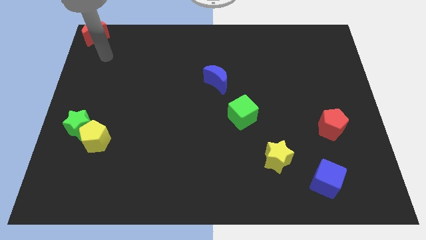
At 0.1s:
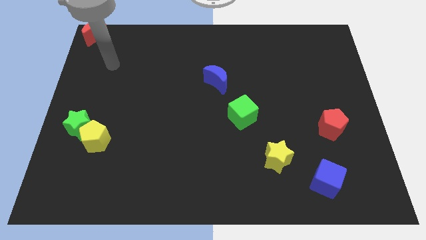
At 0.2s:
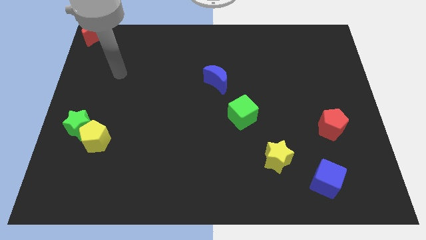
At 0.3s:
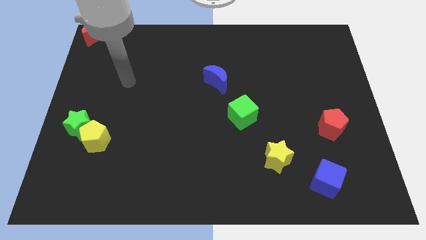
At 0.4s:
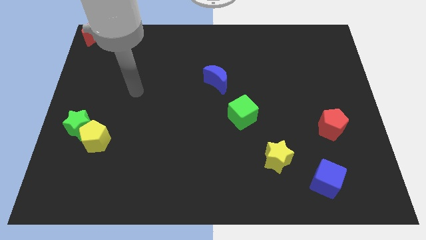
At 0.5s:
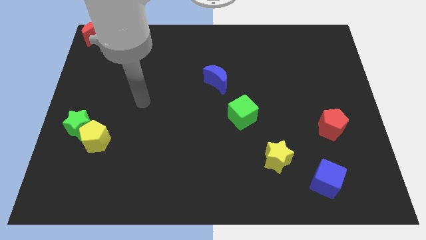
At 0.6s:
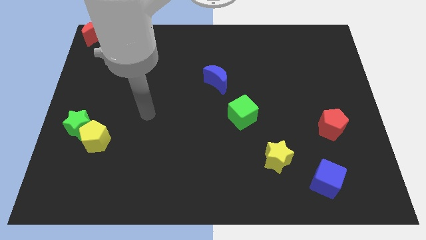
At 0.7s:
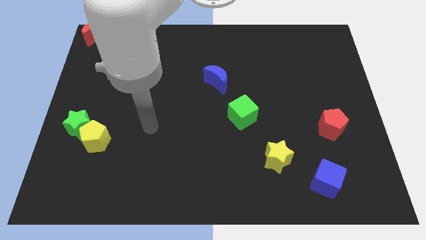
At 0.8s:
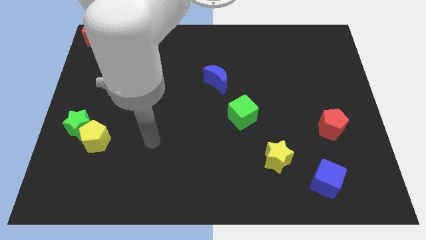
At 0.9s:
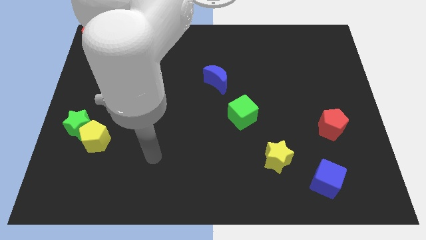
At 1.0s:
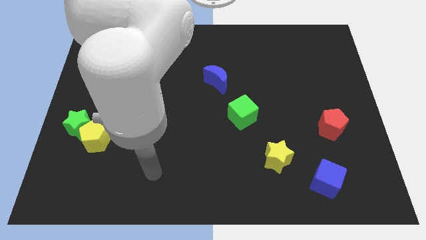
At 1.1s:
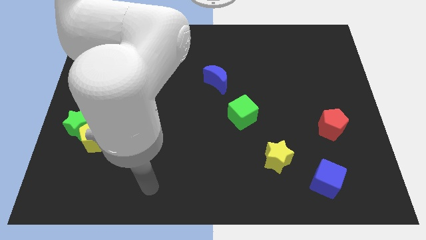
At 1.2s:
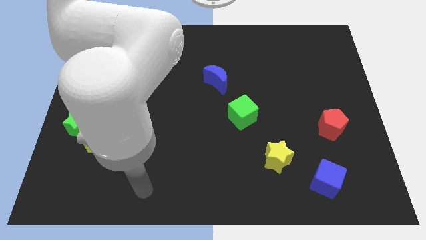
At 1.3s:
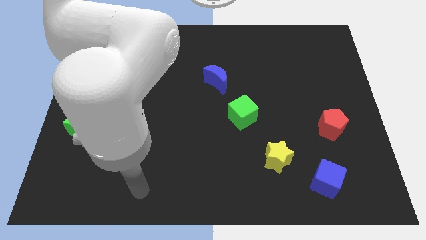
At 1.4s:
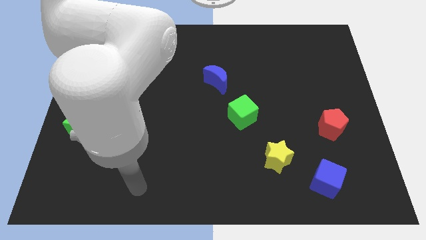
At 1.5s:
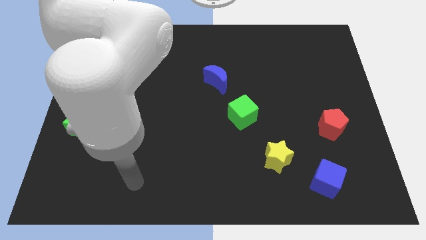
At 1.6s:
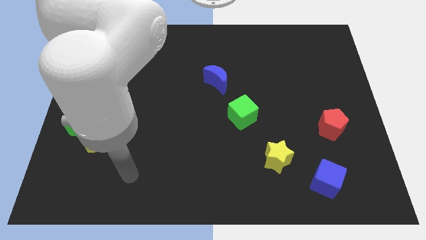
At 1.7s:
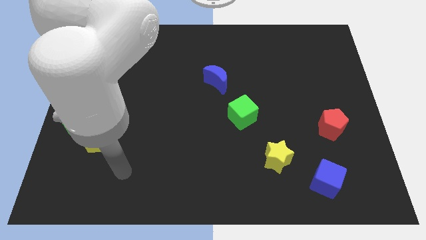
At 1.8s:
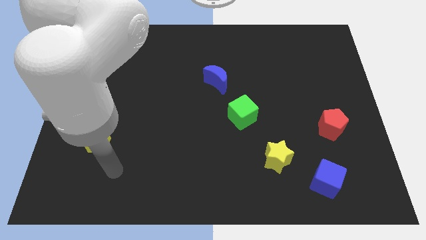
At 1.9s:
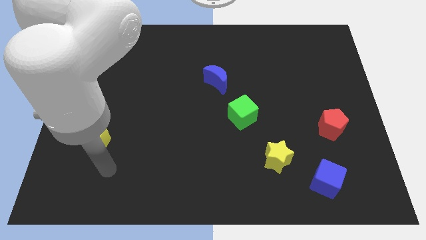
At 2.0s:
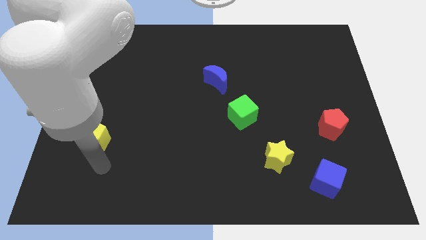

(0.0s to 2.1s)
move your arm below to the yellow pentagon

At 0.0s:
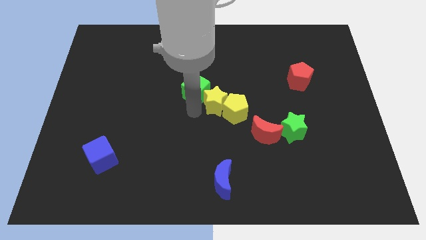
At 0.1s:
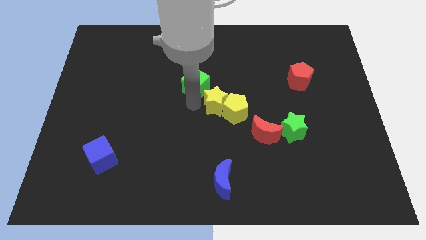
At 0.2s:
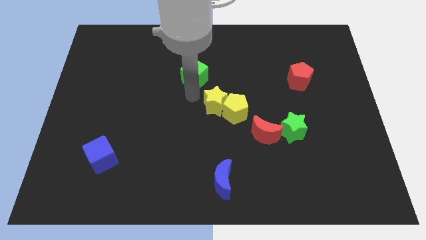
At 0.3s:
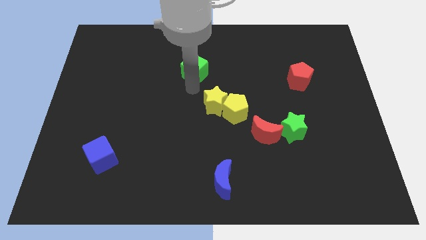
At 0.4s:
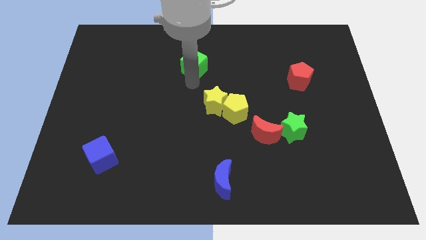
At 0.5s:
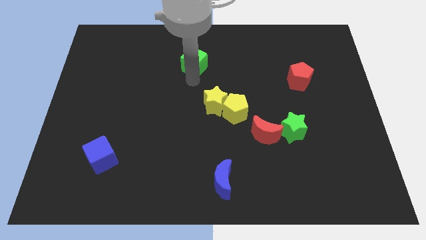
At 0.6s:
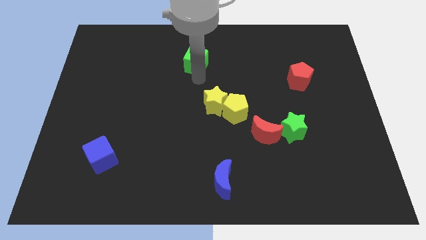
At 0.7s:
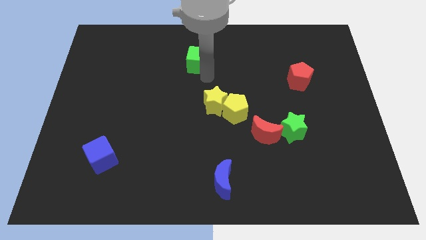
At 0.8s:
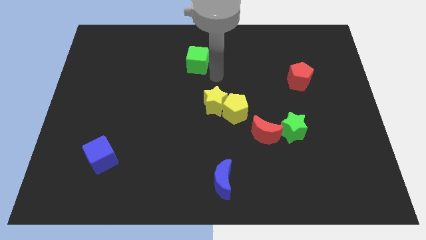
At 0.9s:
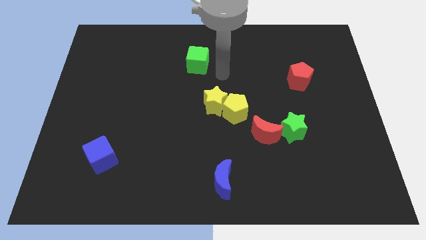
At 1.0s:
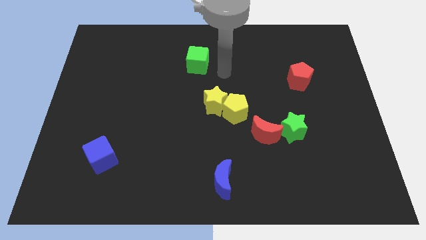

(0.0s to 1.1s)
move the green cube to the top of the board

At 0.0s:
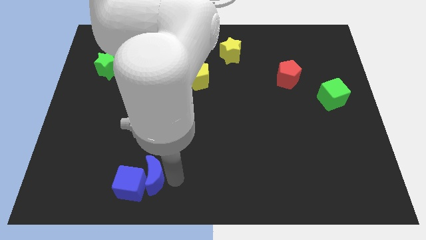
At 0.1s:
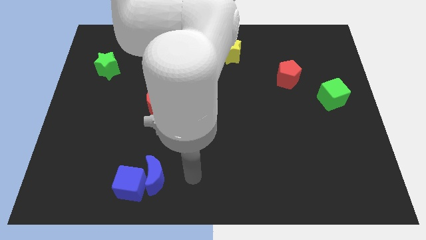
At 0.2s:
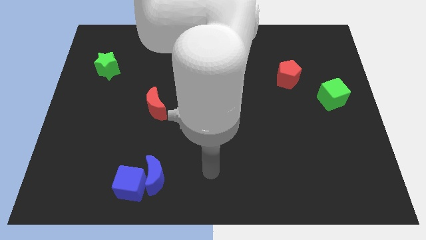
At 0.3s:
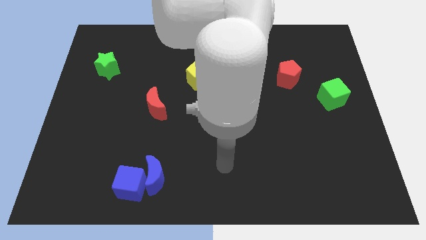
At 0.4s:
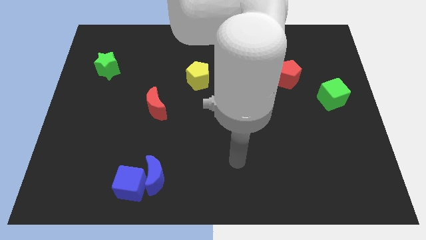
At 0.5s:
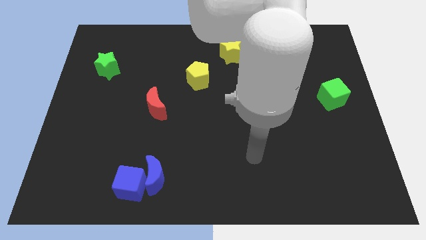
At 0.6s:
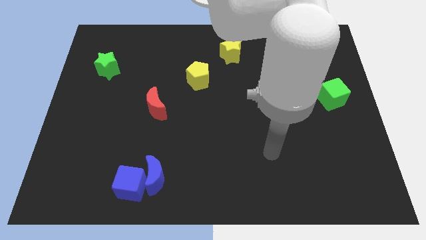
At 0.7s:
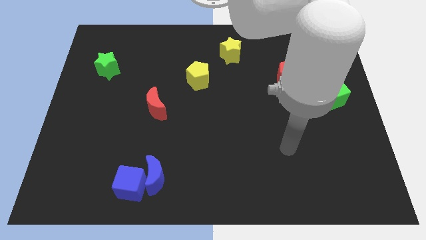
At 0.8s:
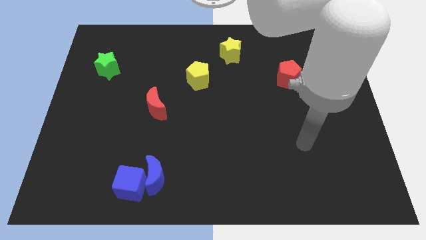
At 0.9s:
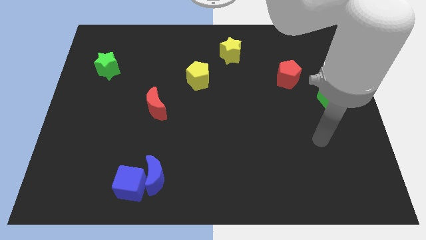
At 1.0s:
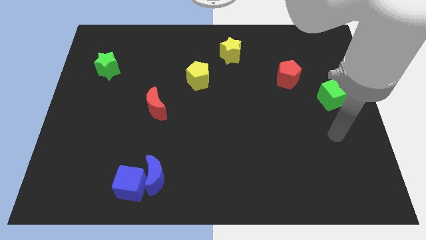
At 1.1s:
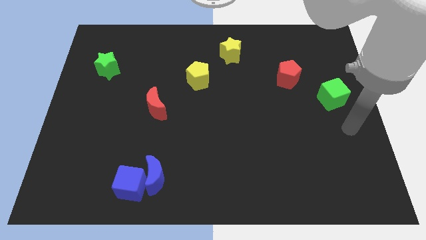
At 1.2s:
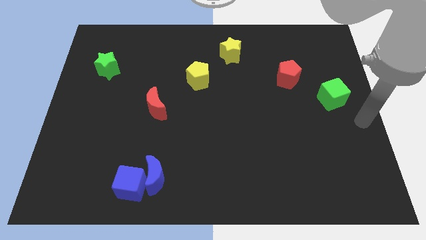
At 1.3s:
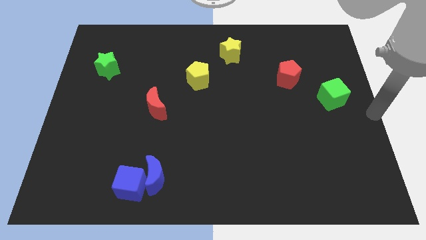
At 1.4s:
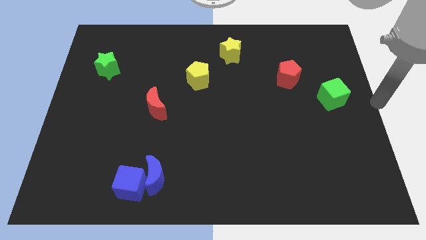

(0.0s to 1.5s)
point your arm at the center right of the board

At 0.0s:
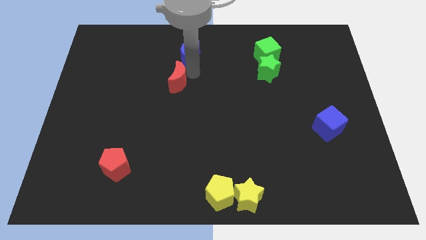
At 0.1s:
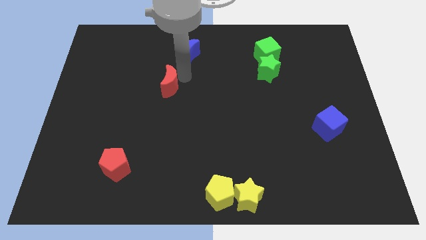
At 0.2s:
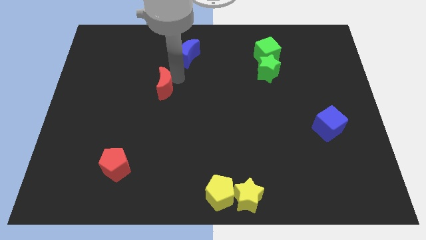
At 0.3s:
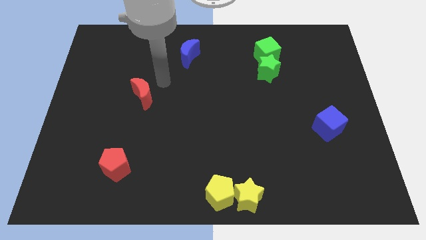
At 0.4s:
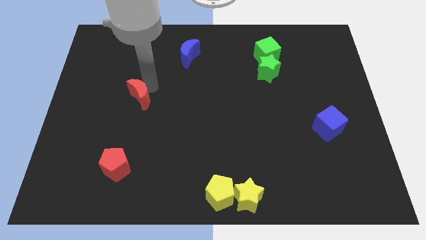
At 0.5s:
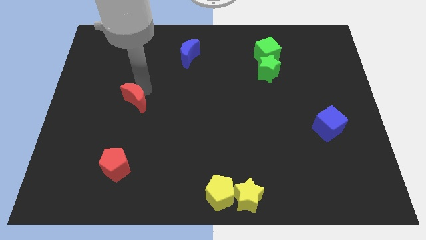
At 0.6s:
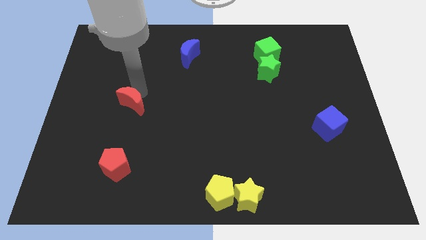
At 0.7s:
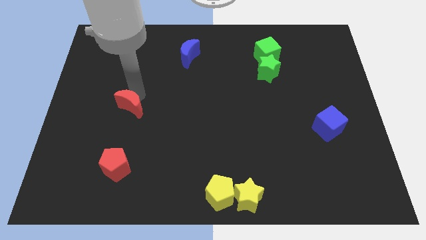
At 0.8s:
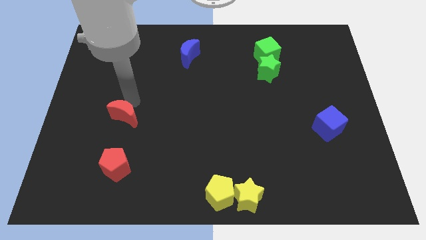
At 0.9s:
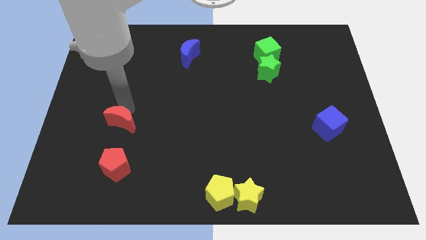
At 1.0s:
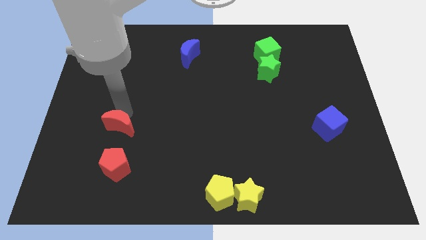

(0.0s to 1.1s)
separate red moon from blue moon

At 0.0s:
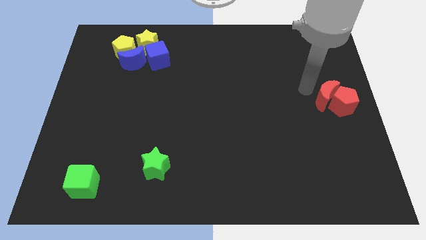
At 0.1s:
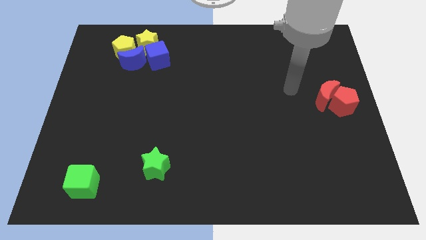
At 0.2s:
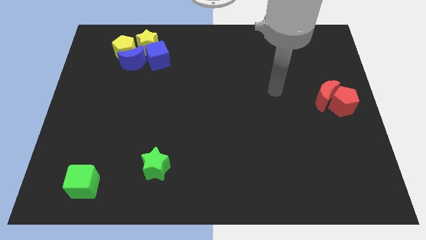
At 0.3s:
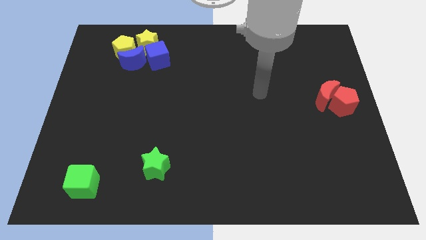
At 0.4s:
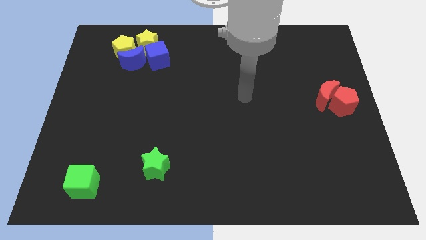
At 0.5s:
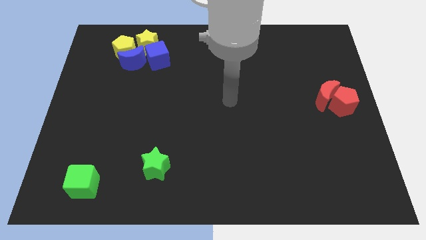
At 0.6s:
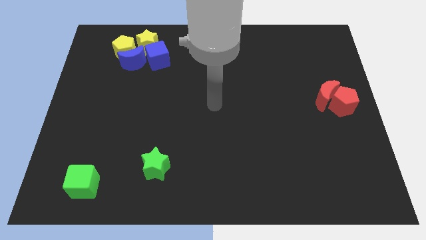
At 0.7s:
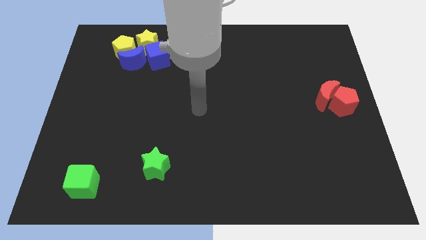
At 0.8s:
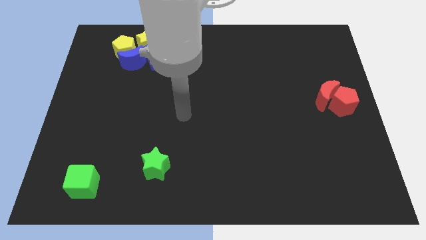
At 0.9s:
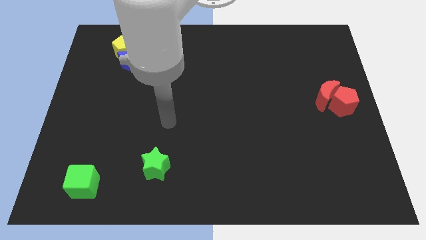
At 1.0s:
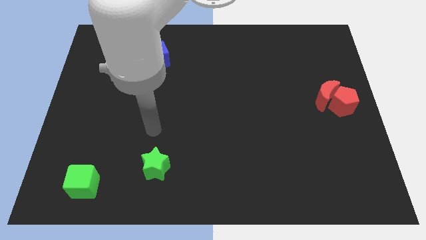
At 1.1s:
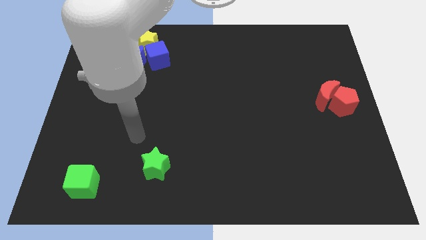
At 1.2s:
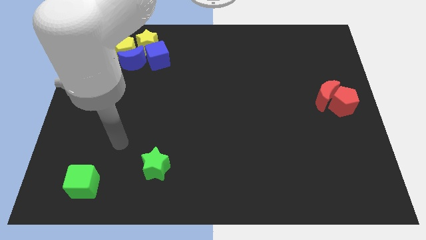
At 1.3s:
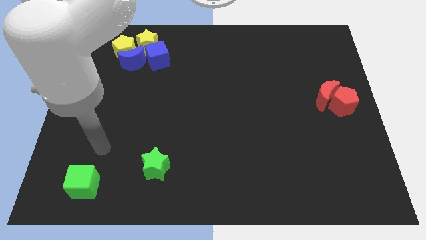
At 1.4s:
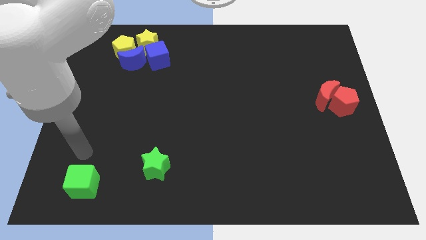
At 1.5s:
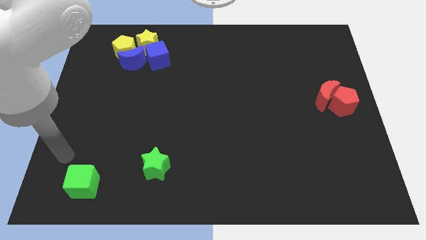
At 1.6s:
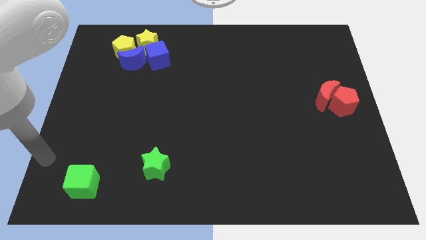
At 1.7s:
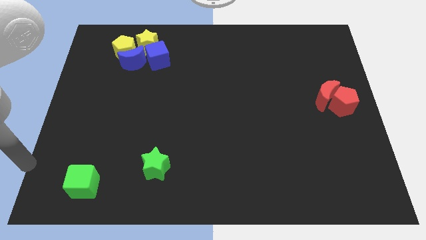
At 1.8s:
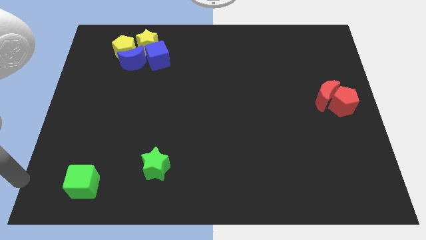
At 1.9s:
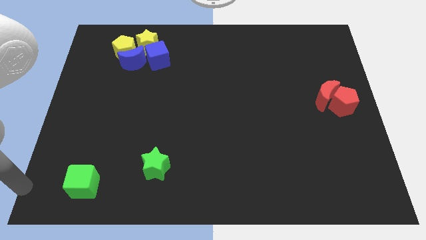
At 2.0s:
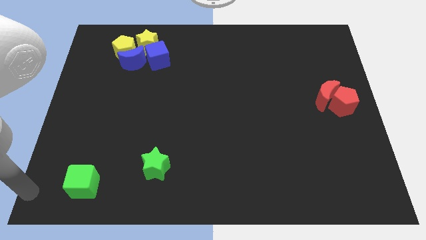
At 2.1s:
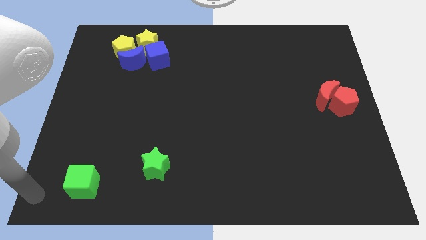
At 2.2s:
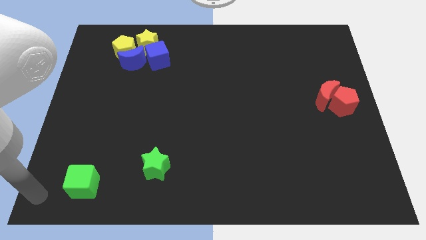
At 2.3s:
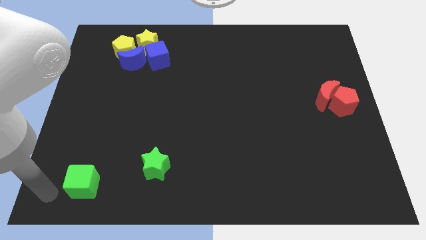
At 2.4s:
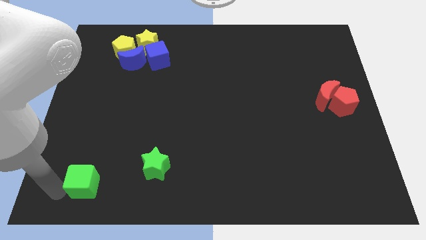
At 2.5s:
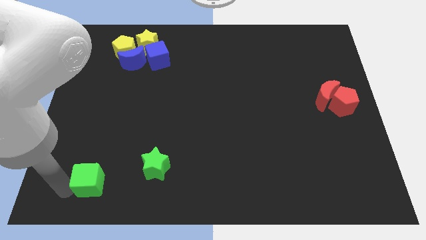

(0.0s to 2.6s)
move the arm to the left of the green cube

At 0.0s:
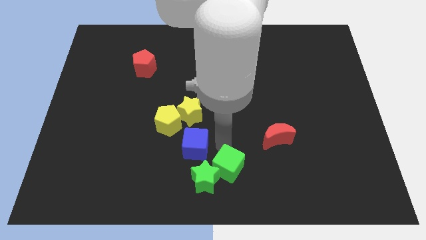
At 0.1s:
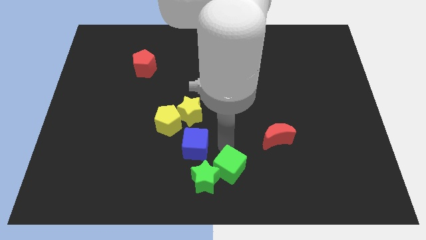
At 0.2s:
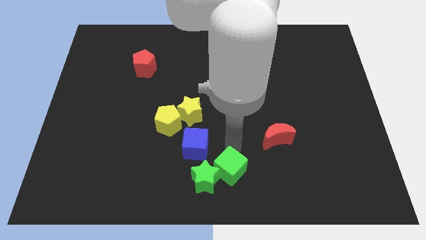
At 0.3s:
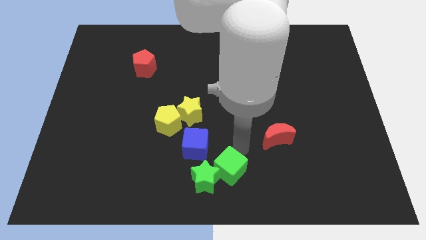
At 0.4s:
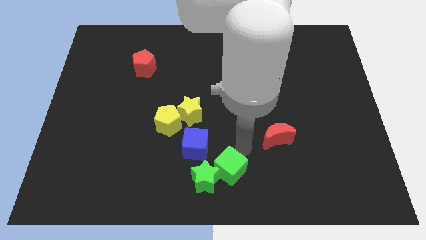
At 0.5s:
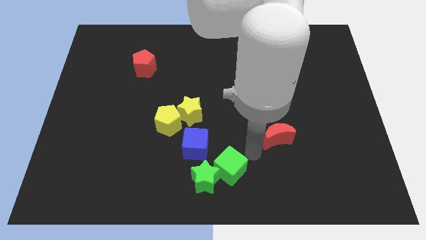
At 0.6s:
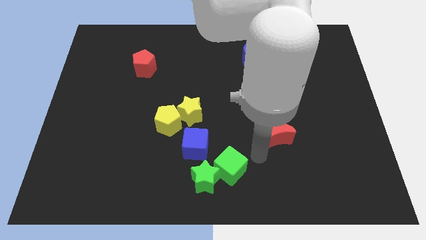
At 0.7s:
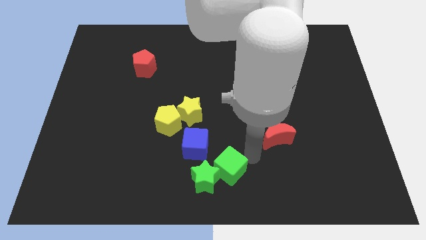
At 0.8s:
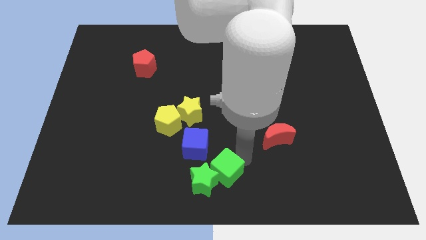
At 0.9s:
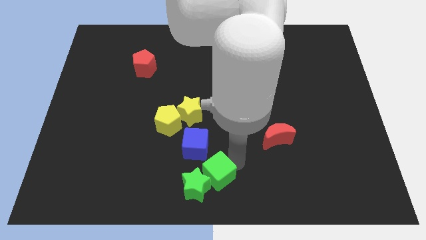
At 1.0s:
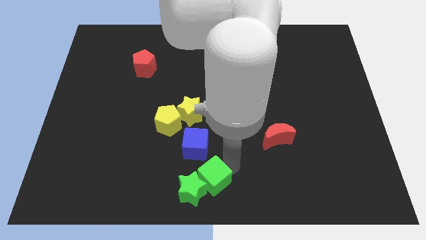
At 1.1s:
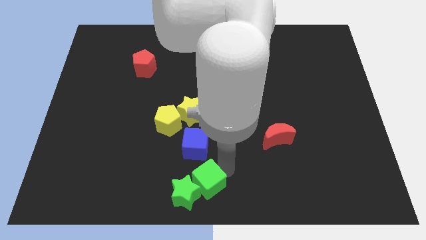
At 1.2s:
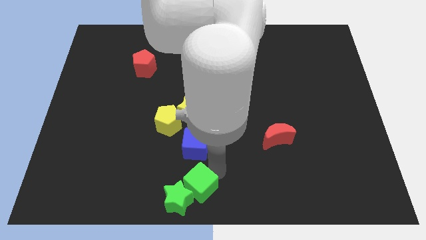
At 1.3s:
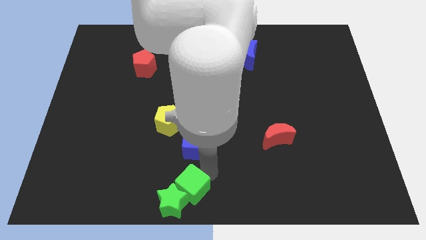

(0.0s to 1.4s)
push the green cube along with green star to bottom of the board
